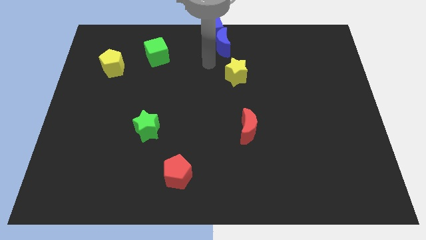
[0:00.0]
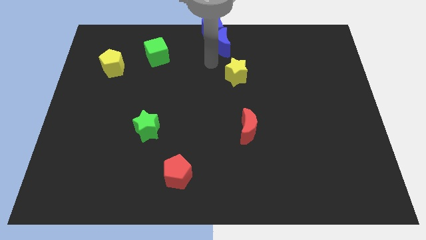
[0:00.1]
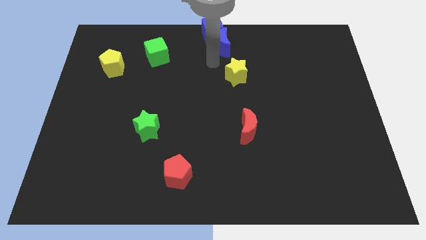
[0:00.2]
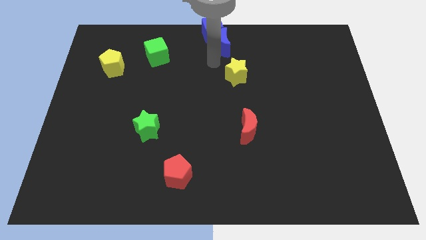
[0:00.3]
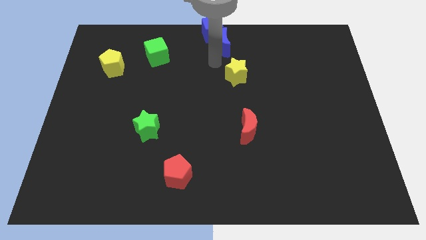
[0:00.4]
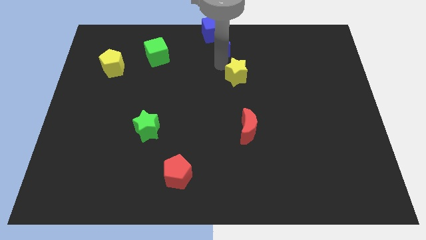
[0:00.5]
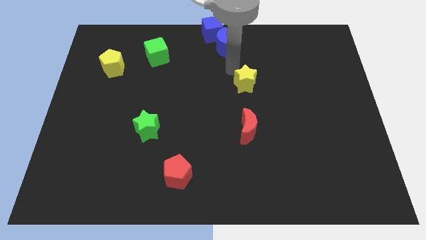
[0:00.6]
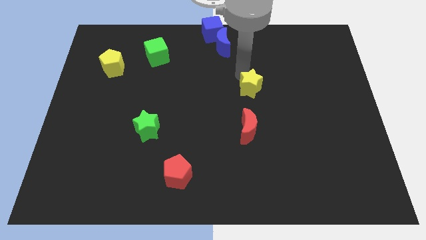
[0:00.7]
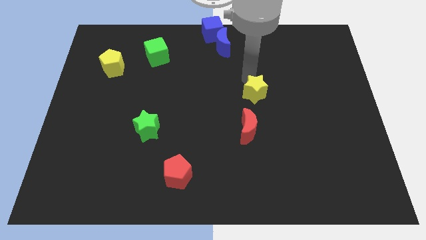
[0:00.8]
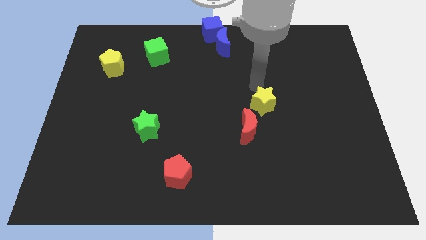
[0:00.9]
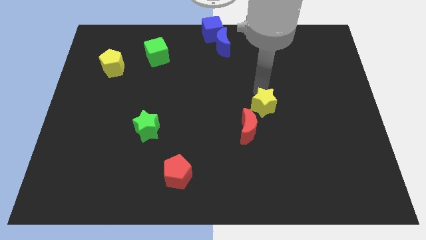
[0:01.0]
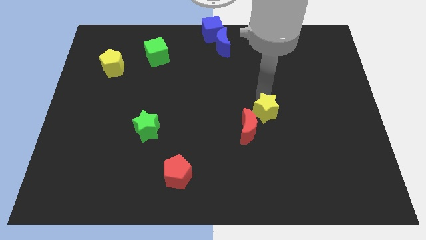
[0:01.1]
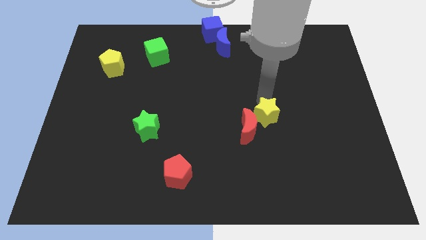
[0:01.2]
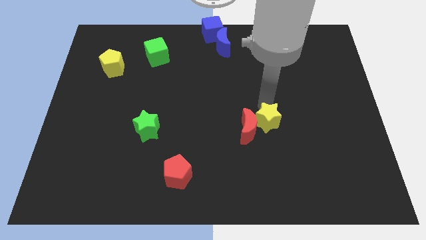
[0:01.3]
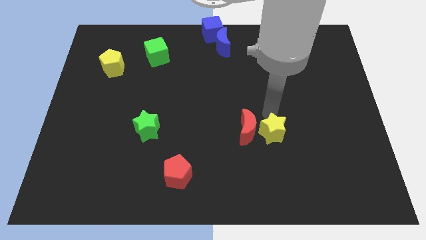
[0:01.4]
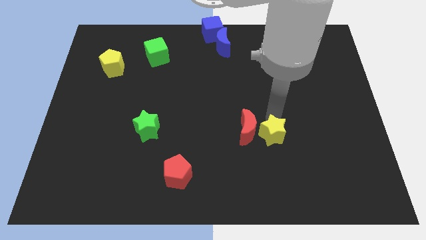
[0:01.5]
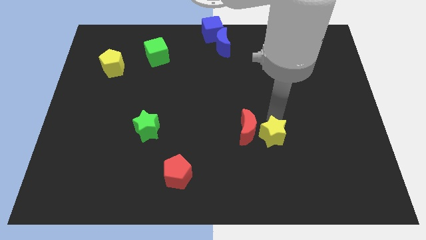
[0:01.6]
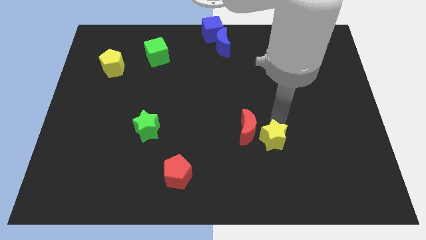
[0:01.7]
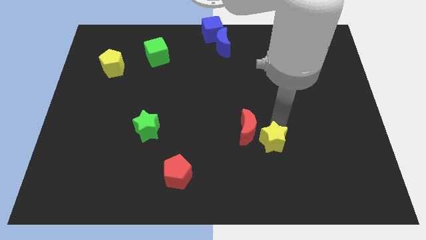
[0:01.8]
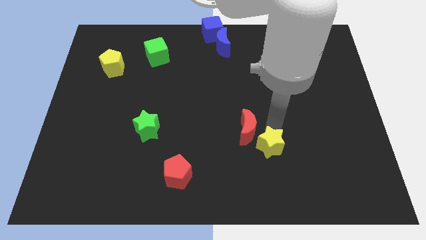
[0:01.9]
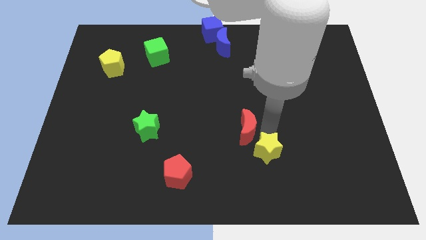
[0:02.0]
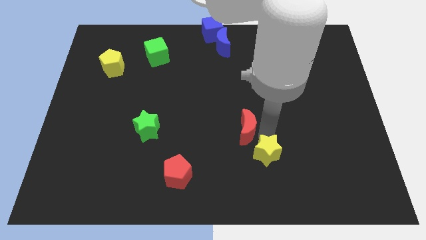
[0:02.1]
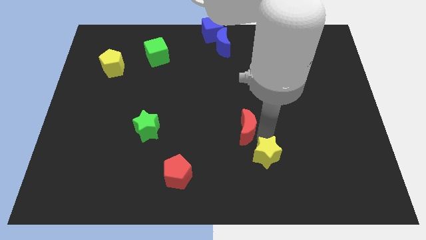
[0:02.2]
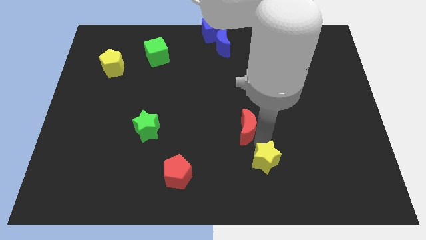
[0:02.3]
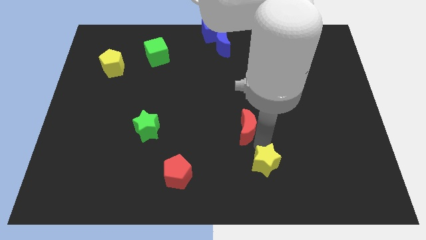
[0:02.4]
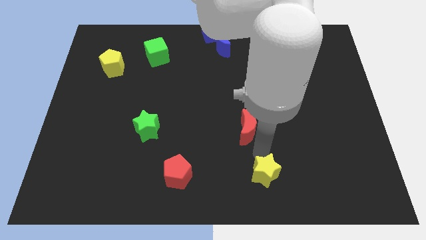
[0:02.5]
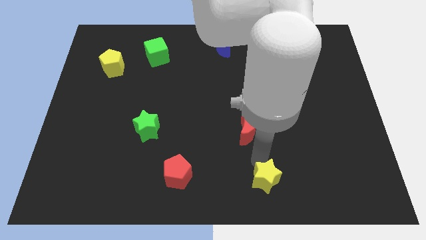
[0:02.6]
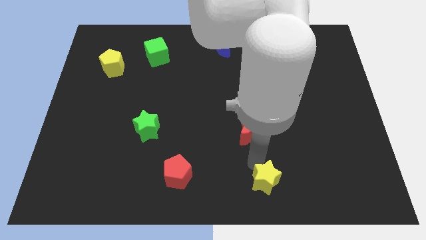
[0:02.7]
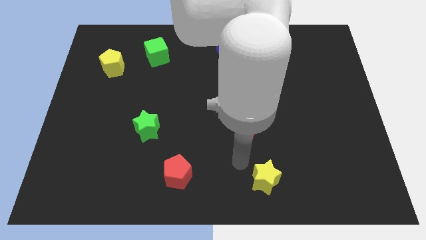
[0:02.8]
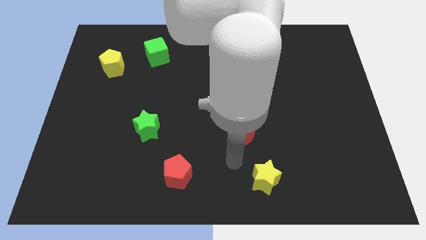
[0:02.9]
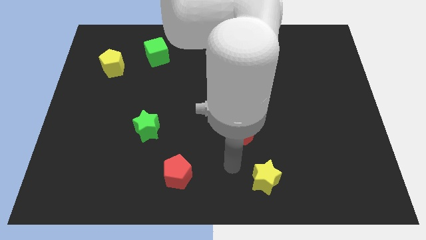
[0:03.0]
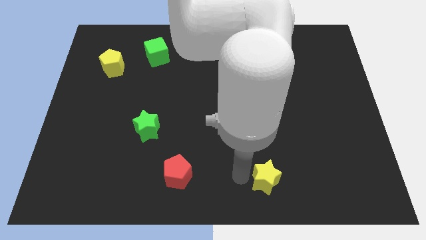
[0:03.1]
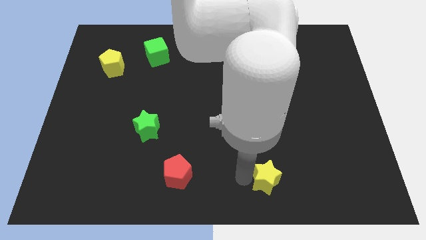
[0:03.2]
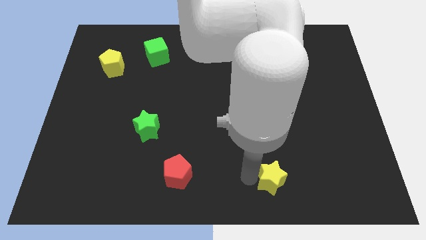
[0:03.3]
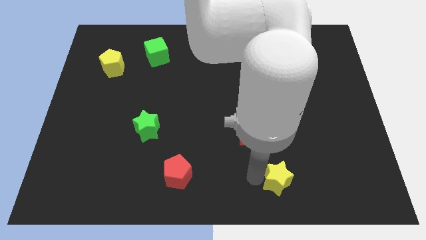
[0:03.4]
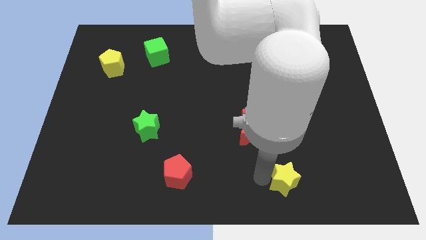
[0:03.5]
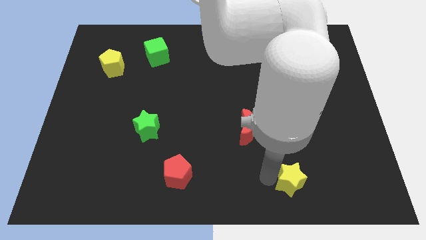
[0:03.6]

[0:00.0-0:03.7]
move the yellow star to the bottom side of the board

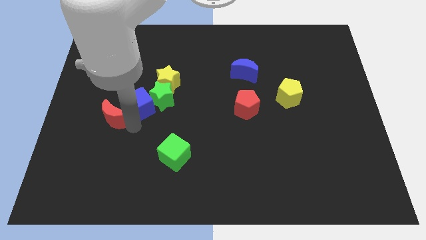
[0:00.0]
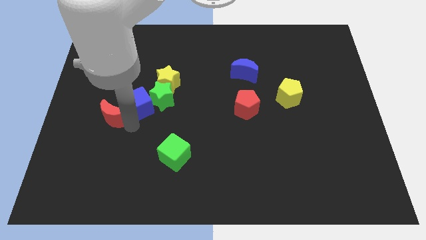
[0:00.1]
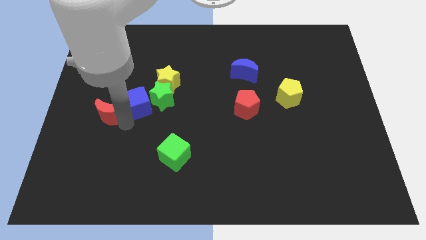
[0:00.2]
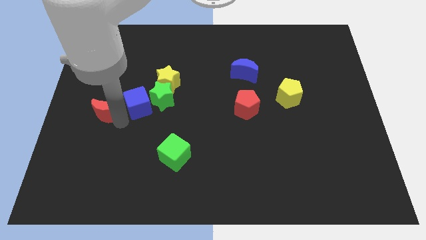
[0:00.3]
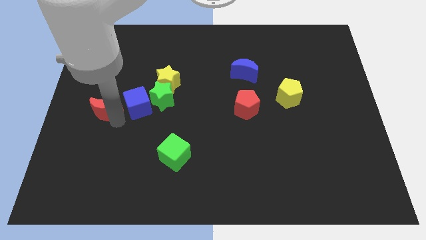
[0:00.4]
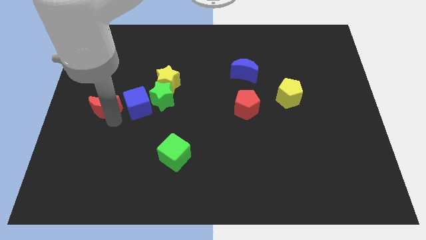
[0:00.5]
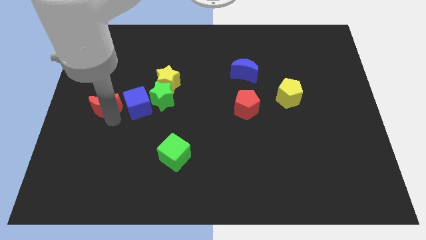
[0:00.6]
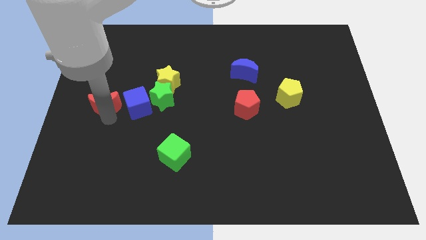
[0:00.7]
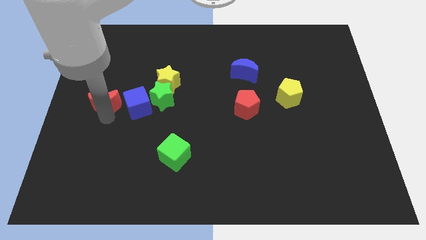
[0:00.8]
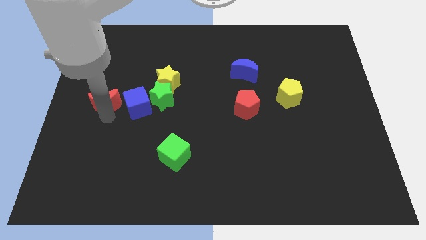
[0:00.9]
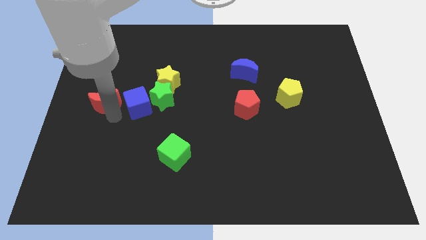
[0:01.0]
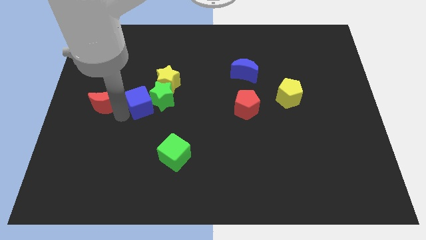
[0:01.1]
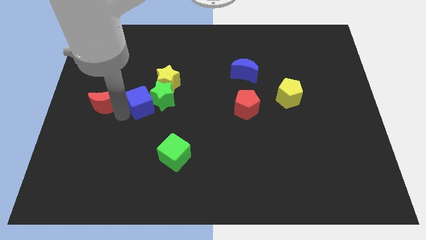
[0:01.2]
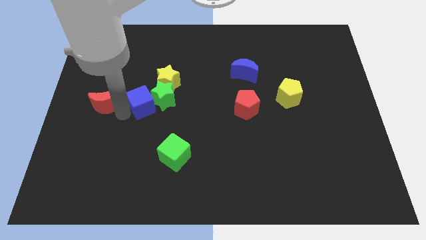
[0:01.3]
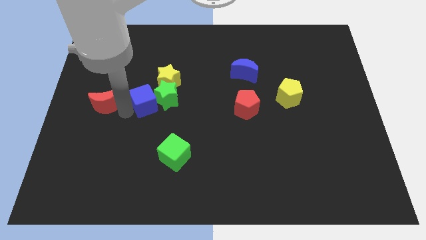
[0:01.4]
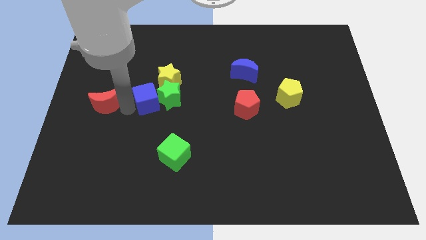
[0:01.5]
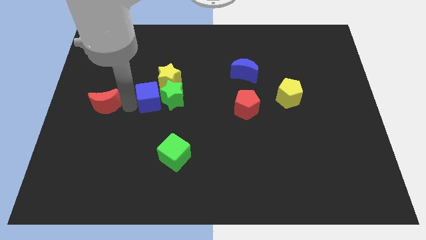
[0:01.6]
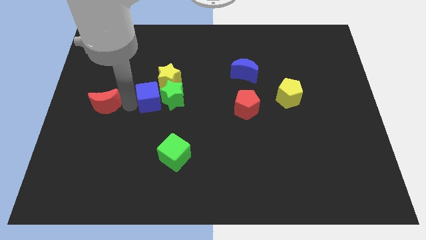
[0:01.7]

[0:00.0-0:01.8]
push the red crescent towards the left side of the board

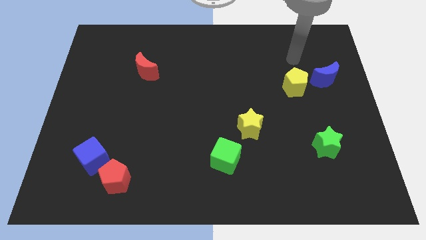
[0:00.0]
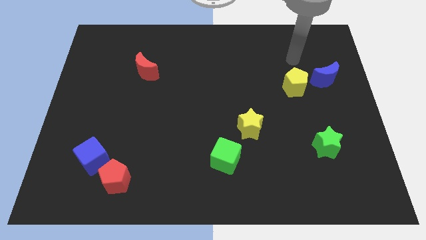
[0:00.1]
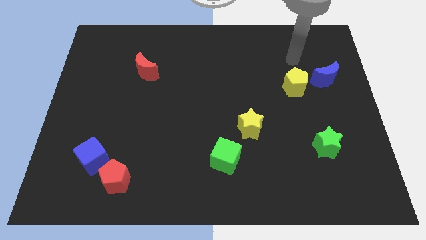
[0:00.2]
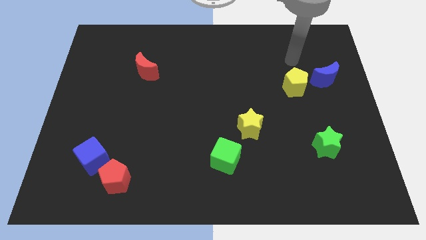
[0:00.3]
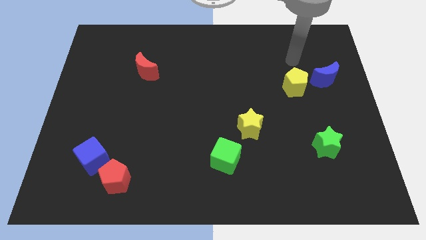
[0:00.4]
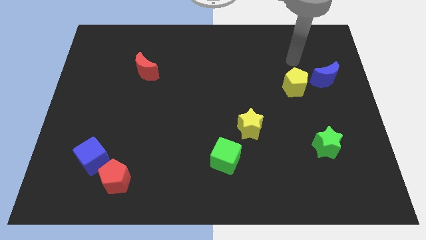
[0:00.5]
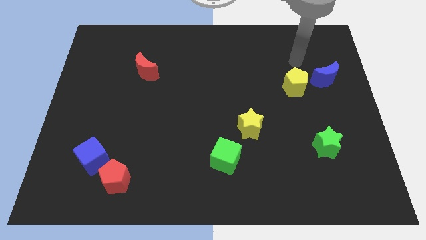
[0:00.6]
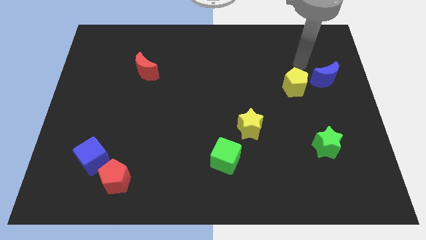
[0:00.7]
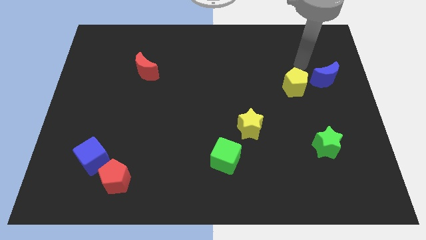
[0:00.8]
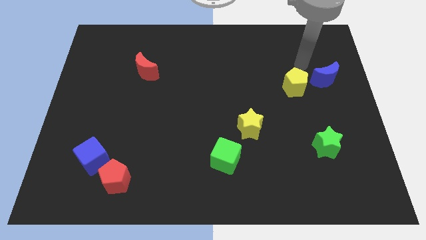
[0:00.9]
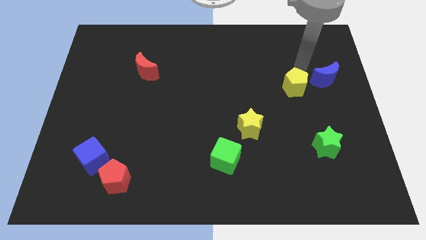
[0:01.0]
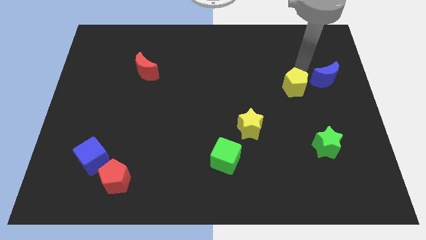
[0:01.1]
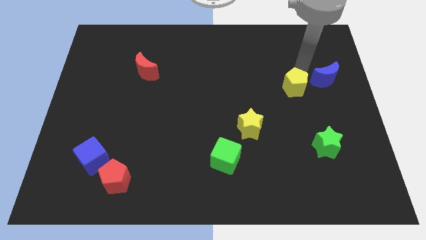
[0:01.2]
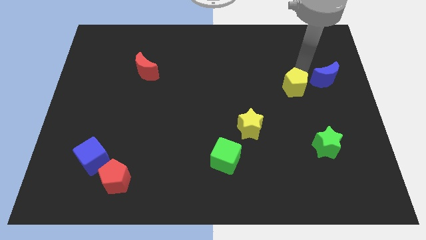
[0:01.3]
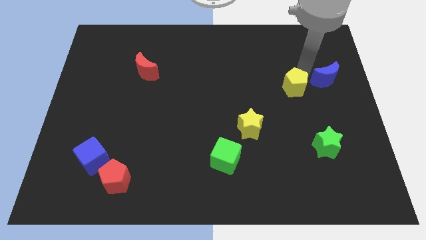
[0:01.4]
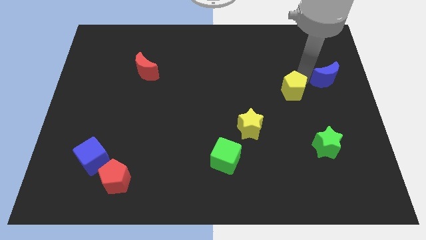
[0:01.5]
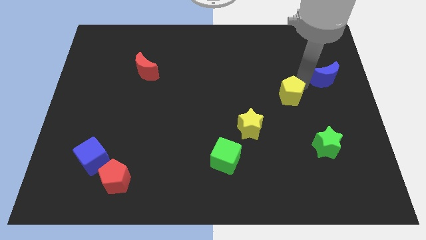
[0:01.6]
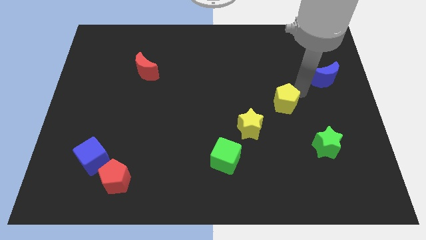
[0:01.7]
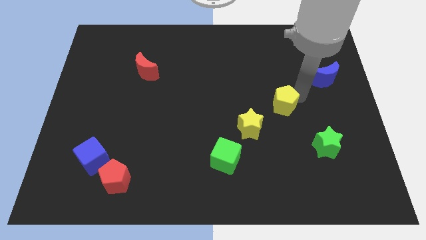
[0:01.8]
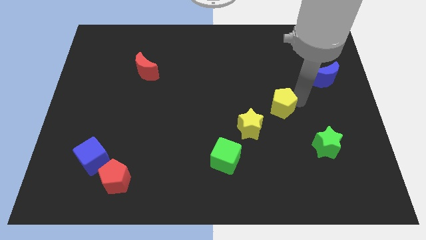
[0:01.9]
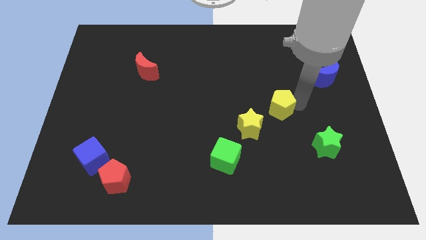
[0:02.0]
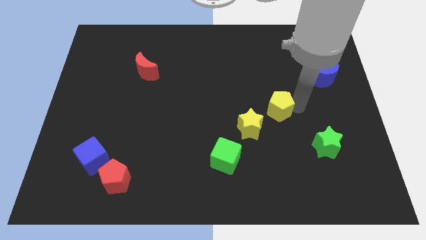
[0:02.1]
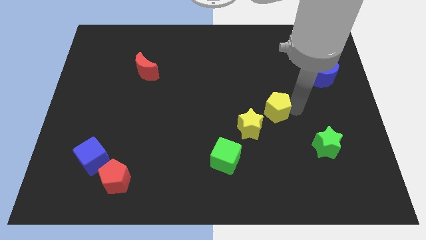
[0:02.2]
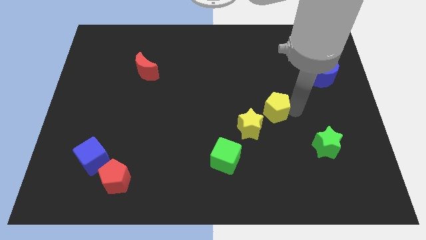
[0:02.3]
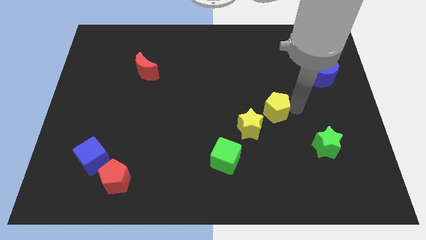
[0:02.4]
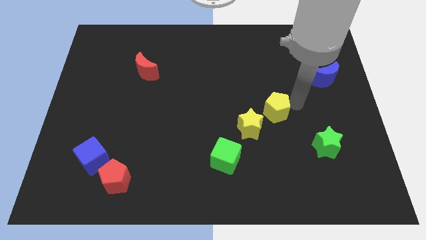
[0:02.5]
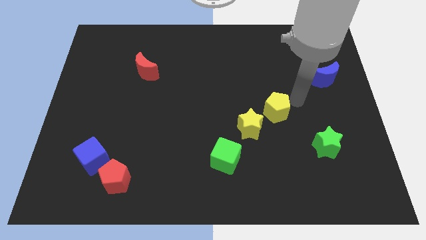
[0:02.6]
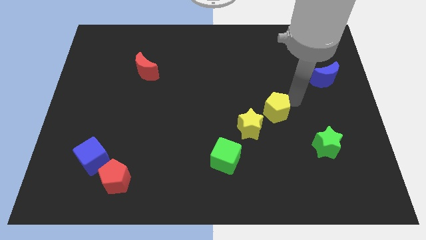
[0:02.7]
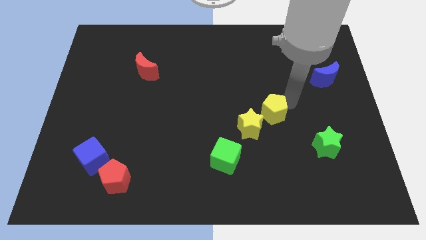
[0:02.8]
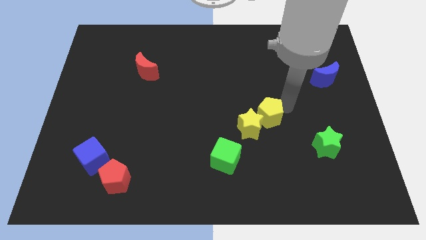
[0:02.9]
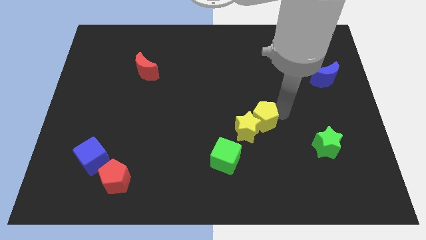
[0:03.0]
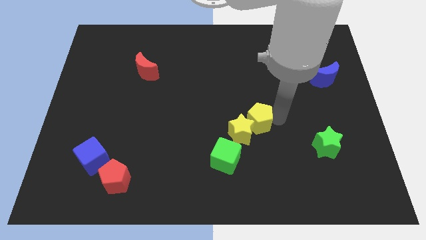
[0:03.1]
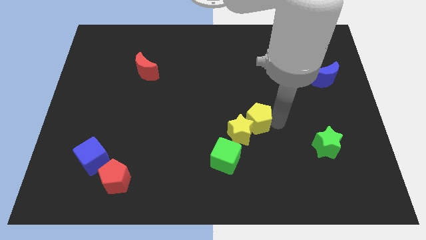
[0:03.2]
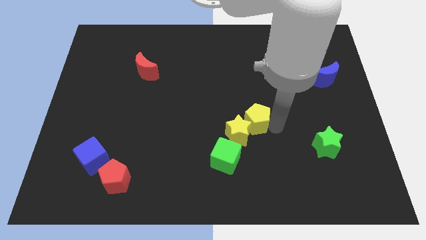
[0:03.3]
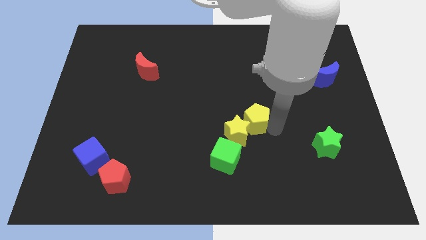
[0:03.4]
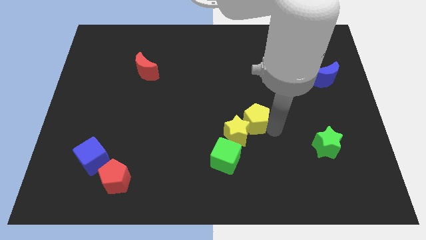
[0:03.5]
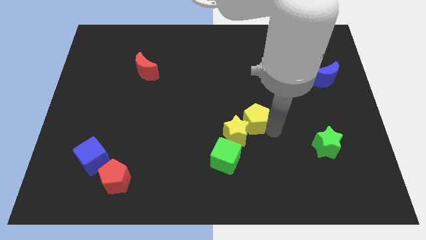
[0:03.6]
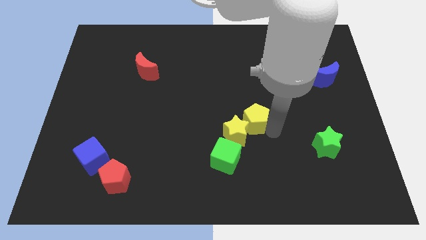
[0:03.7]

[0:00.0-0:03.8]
push the yellow pentagon into the yellow star
